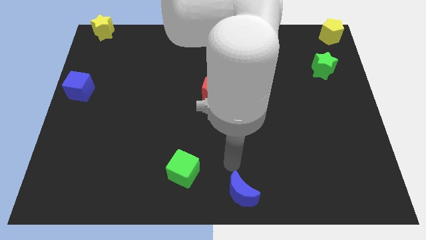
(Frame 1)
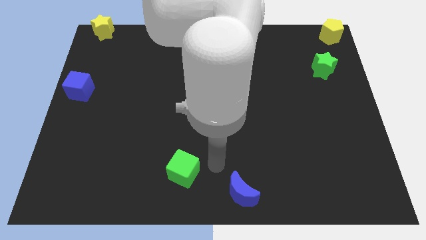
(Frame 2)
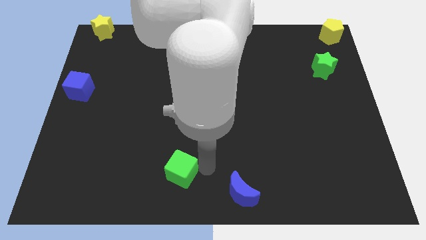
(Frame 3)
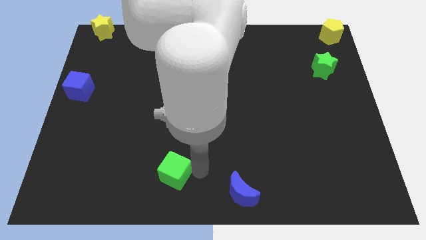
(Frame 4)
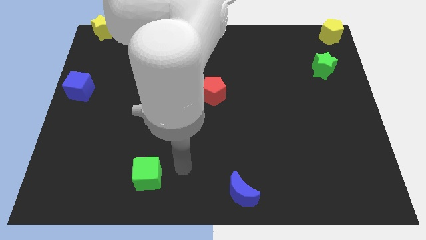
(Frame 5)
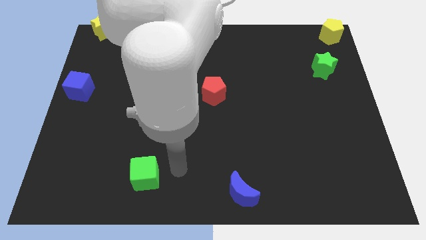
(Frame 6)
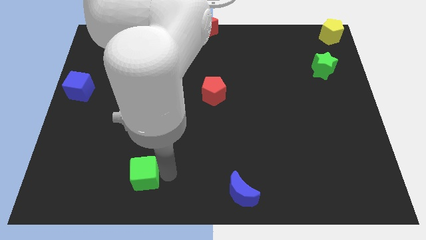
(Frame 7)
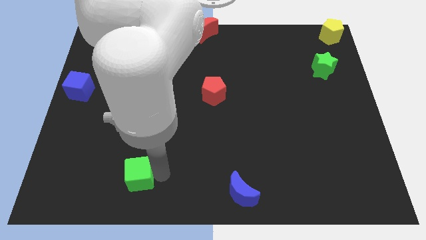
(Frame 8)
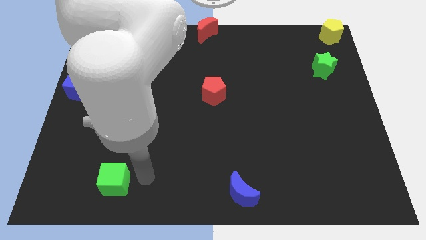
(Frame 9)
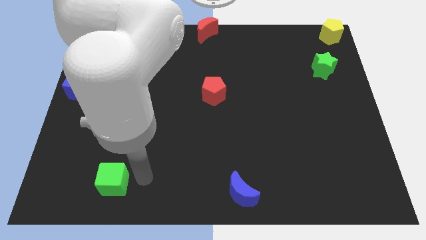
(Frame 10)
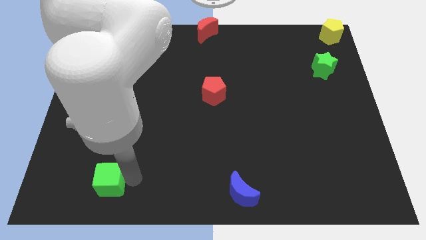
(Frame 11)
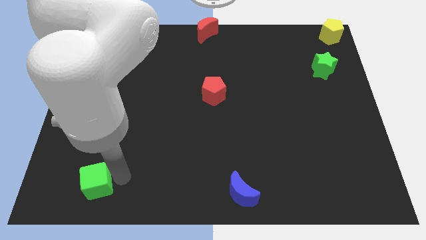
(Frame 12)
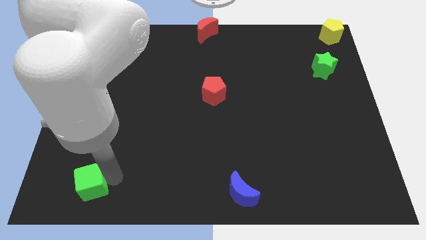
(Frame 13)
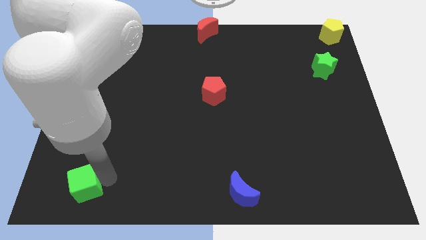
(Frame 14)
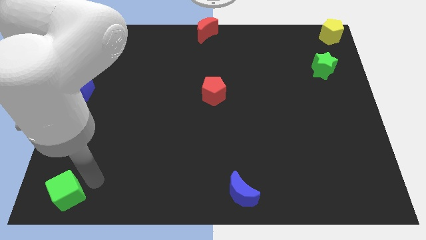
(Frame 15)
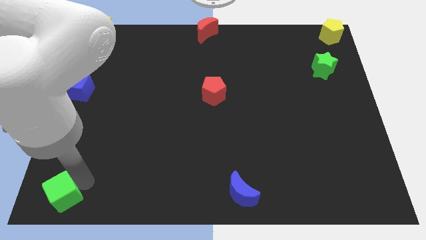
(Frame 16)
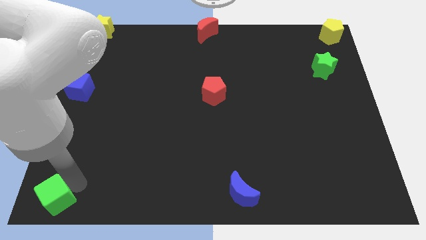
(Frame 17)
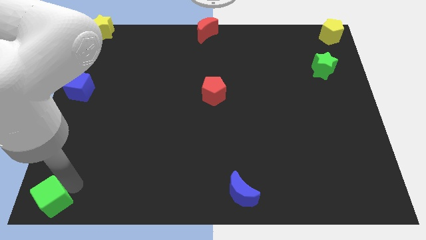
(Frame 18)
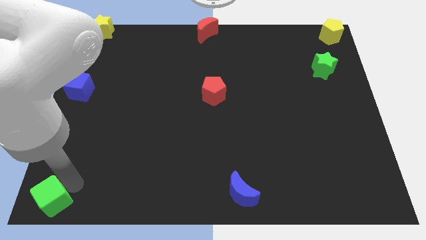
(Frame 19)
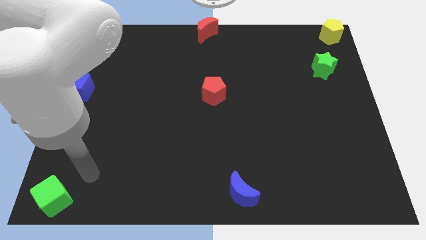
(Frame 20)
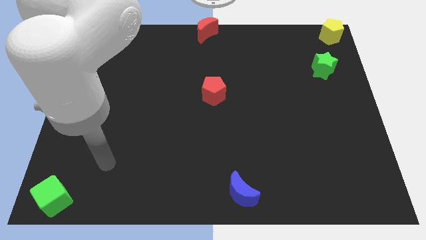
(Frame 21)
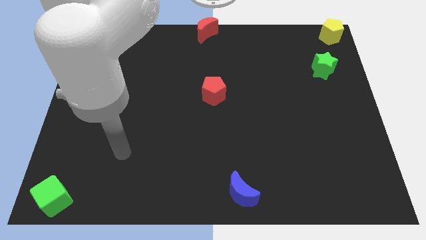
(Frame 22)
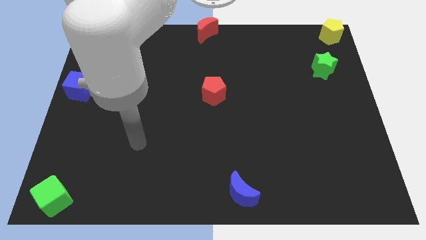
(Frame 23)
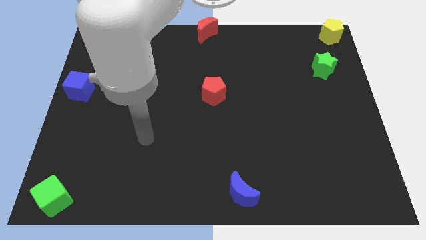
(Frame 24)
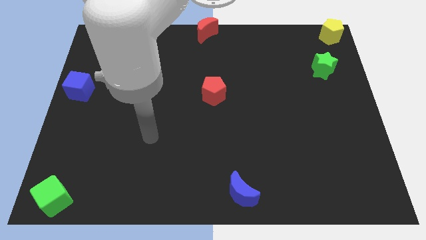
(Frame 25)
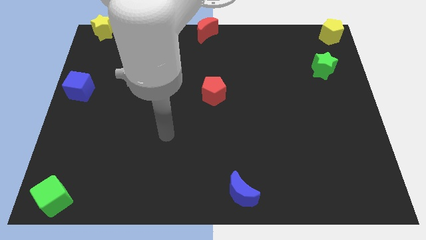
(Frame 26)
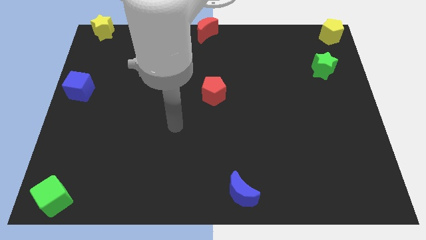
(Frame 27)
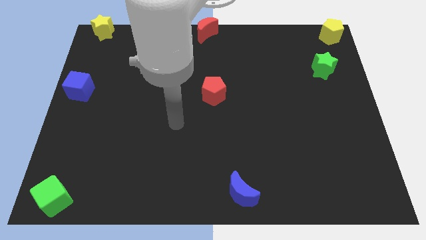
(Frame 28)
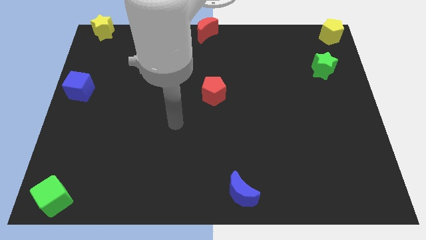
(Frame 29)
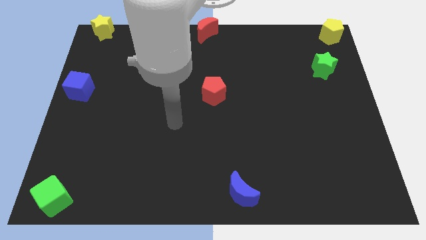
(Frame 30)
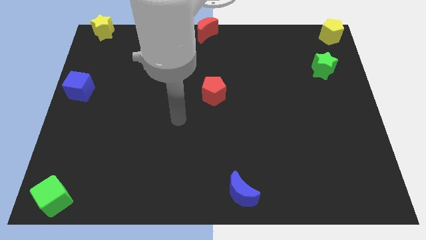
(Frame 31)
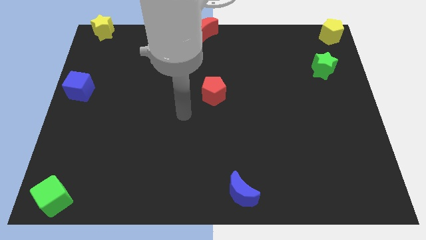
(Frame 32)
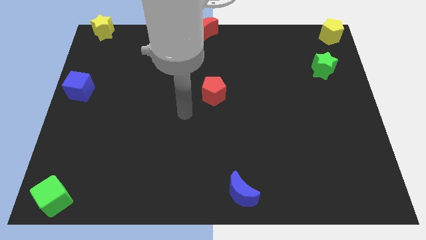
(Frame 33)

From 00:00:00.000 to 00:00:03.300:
place the green cube vertically at the bottom side of the blue cube

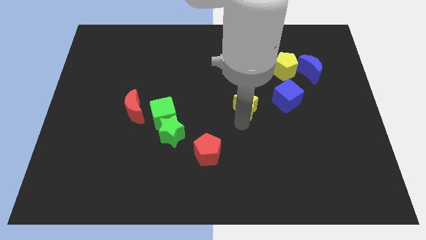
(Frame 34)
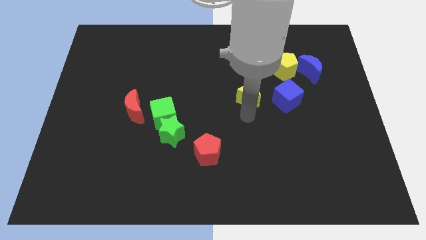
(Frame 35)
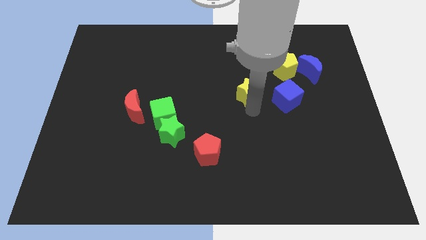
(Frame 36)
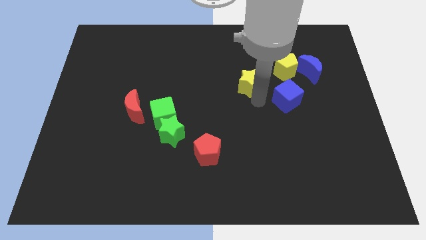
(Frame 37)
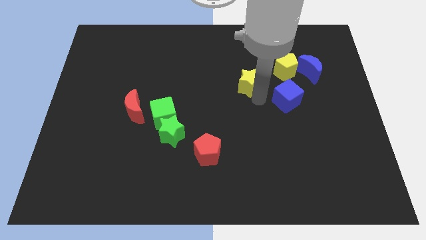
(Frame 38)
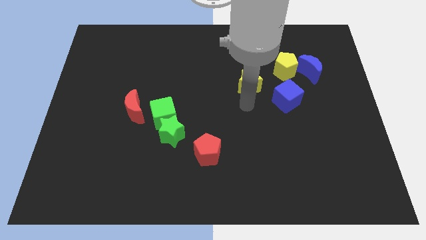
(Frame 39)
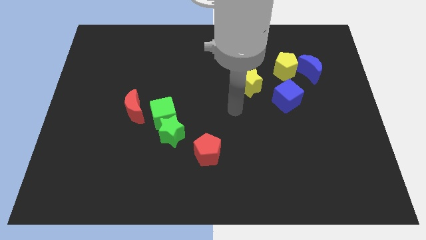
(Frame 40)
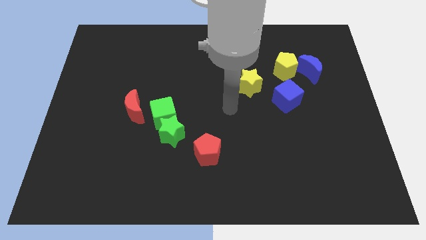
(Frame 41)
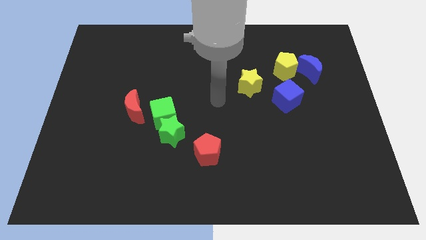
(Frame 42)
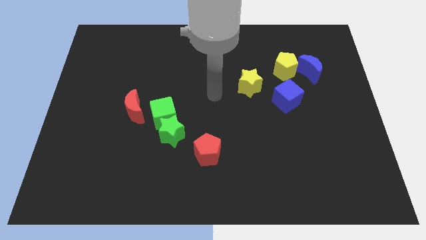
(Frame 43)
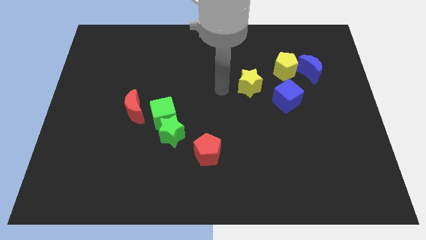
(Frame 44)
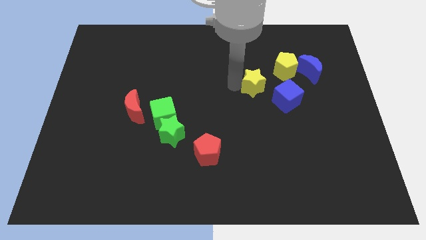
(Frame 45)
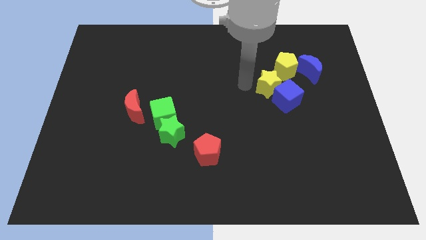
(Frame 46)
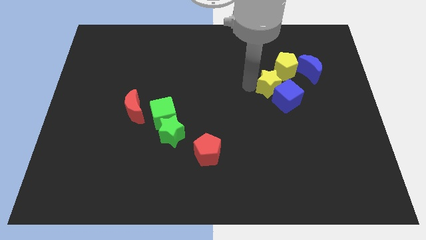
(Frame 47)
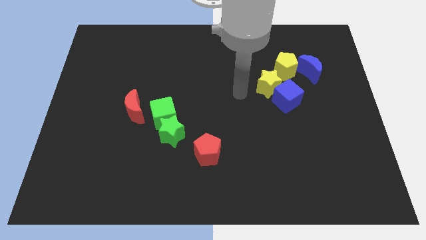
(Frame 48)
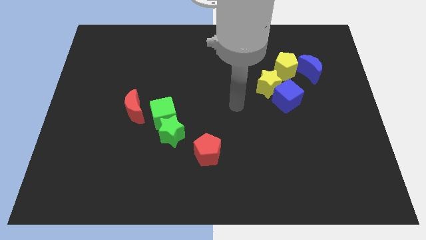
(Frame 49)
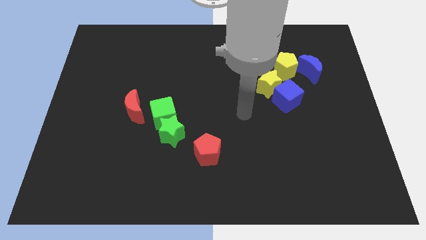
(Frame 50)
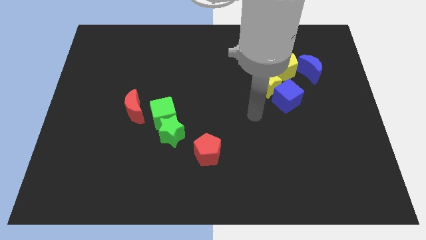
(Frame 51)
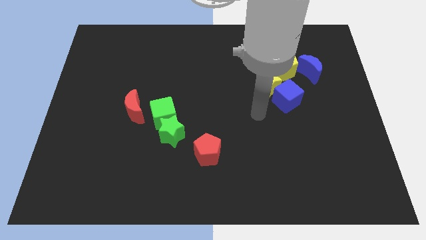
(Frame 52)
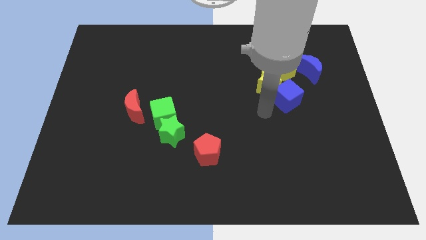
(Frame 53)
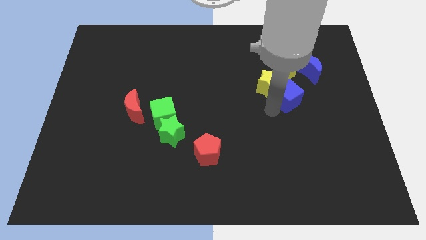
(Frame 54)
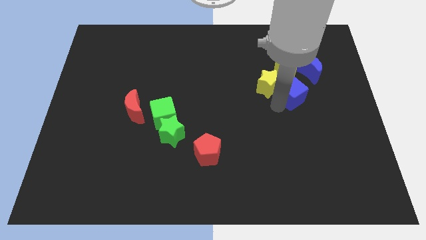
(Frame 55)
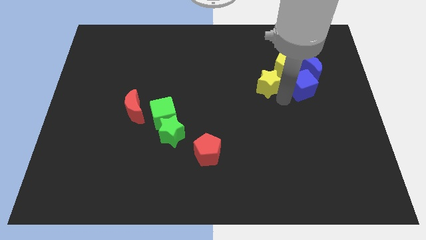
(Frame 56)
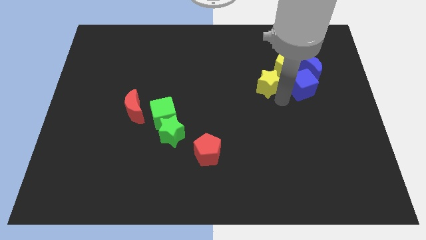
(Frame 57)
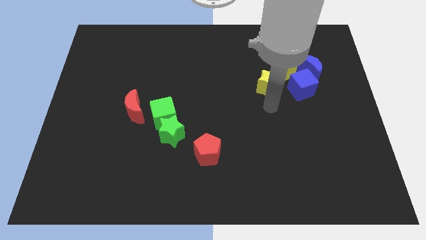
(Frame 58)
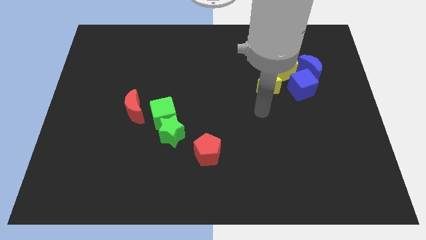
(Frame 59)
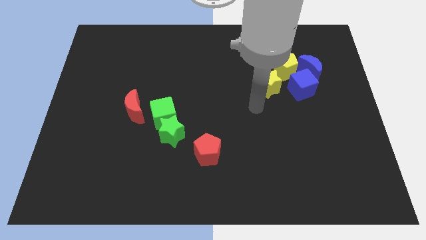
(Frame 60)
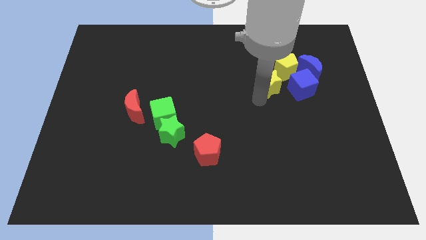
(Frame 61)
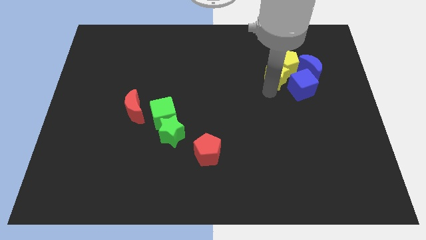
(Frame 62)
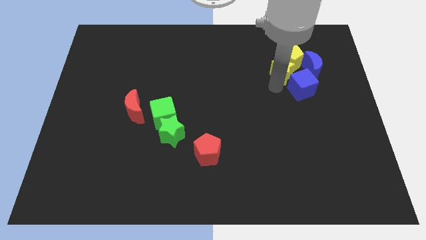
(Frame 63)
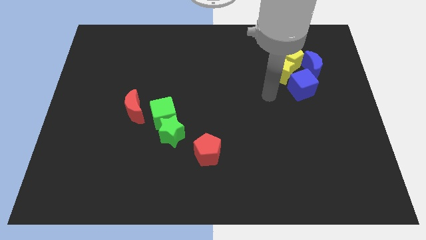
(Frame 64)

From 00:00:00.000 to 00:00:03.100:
move yellow star blue cube into group of blocks

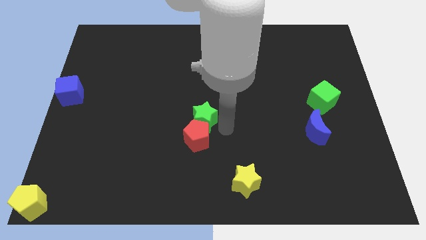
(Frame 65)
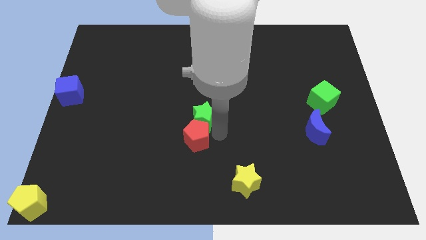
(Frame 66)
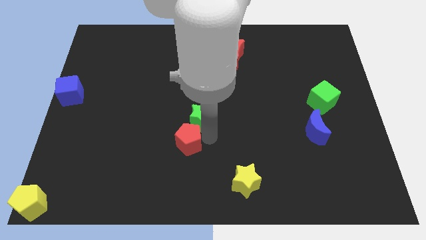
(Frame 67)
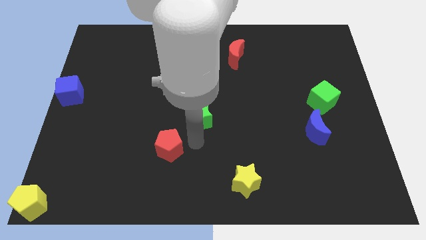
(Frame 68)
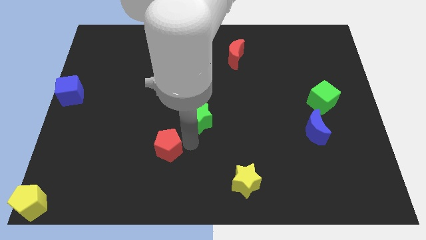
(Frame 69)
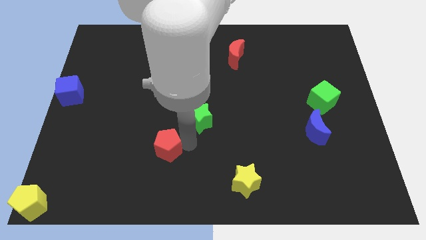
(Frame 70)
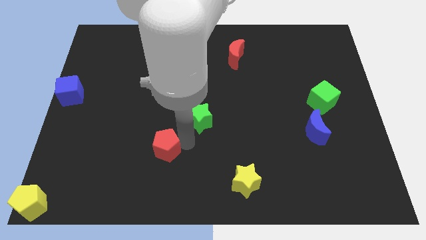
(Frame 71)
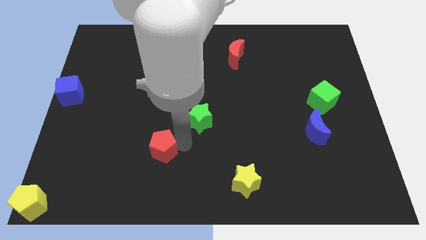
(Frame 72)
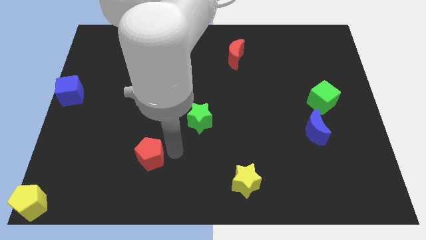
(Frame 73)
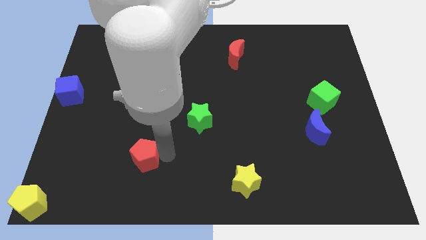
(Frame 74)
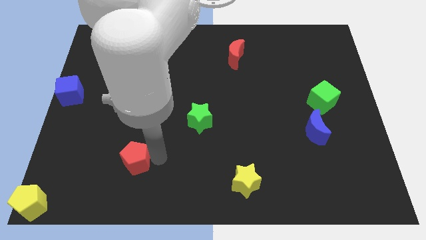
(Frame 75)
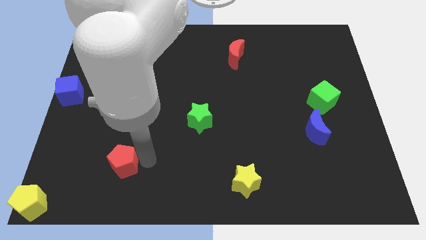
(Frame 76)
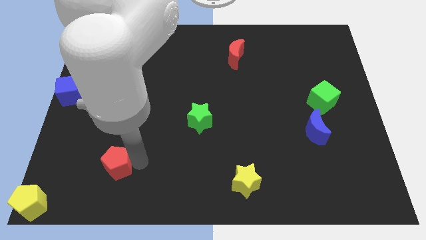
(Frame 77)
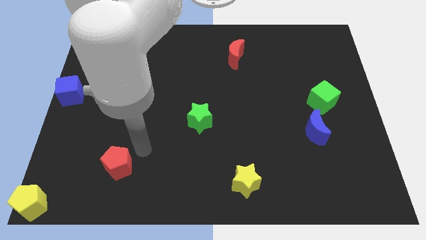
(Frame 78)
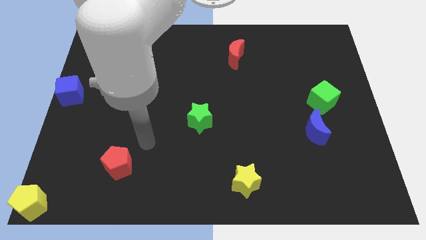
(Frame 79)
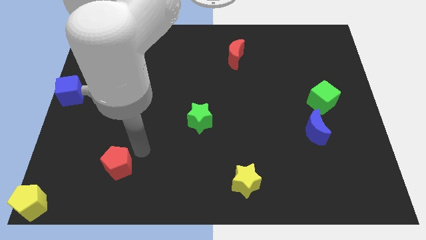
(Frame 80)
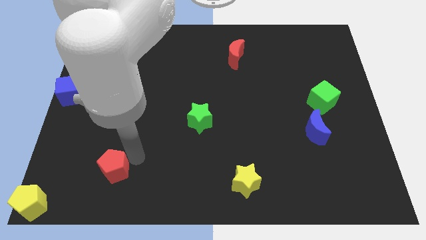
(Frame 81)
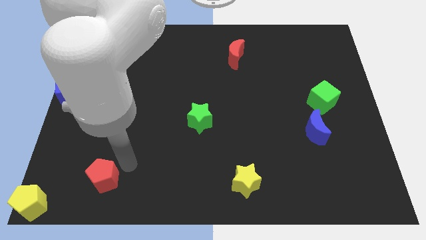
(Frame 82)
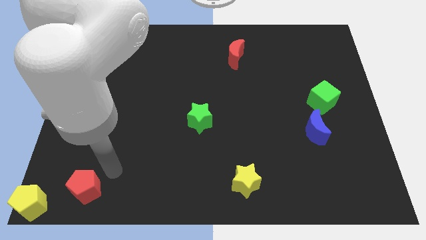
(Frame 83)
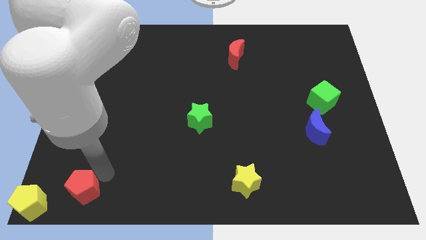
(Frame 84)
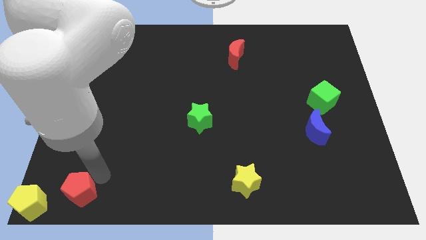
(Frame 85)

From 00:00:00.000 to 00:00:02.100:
separate the red pentagon from the green star

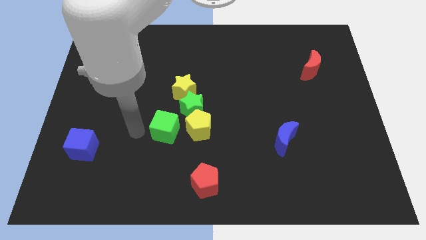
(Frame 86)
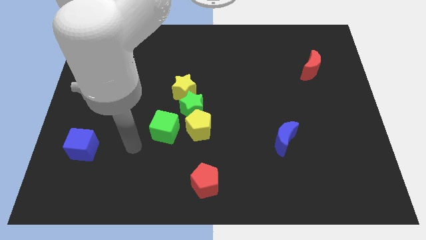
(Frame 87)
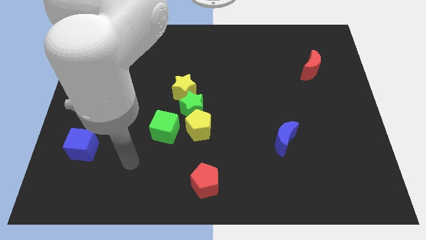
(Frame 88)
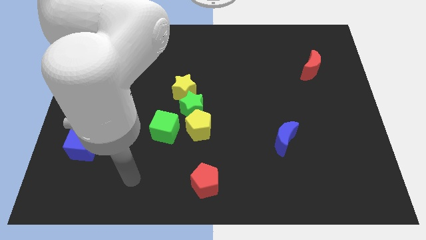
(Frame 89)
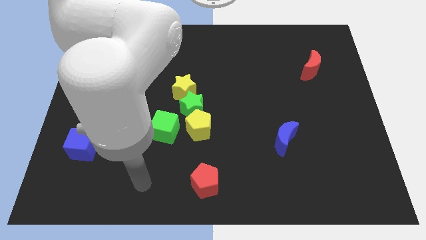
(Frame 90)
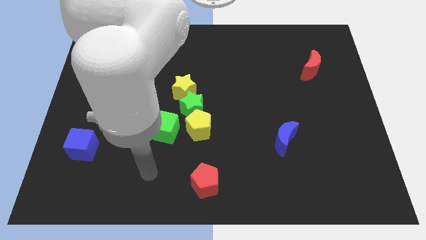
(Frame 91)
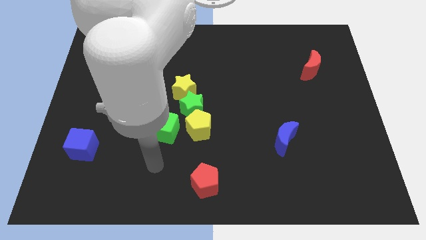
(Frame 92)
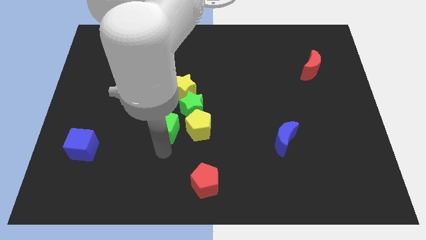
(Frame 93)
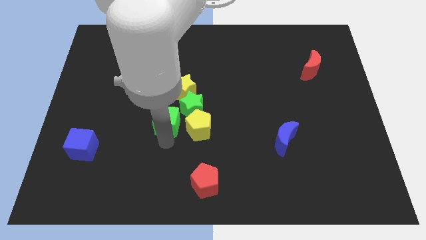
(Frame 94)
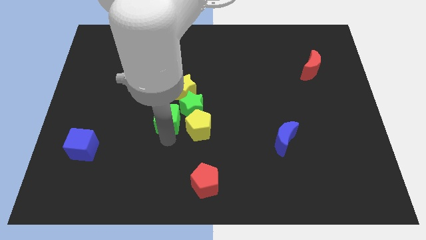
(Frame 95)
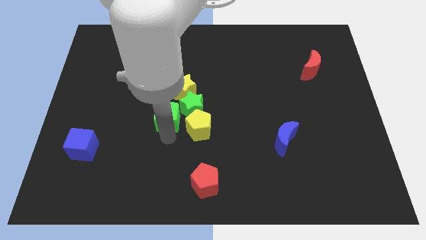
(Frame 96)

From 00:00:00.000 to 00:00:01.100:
move your arm at the bottom of the green cube
